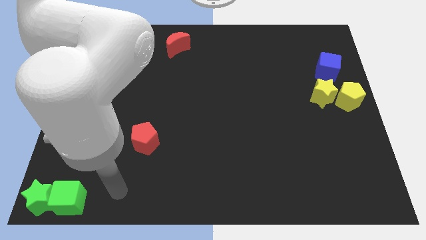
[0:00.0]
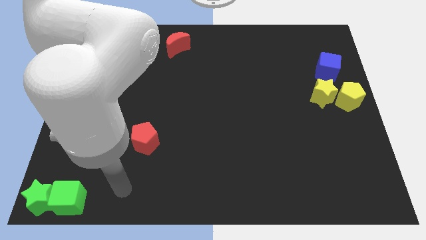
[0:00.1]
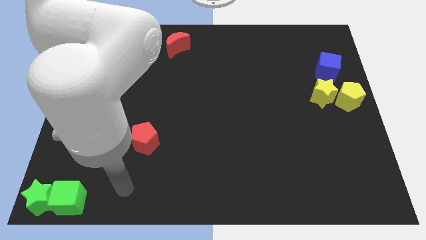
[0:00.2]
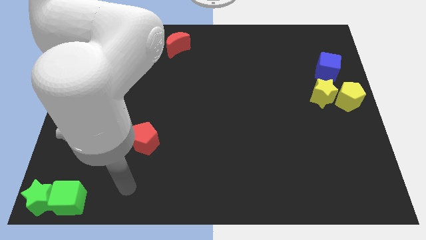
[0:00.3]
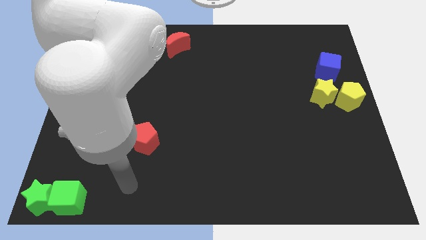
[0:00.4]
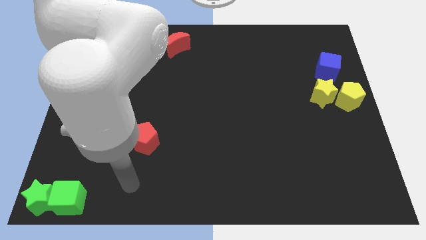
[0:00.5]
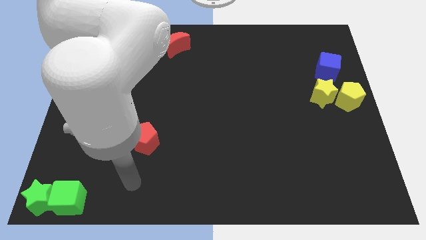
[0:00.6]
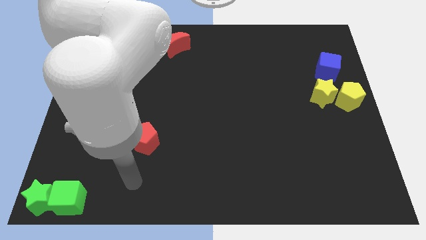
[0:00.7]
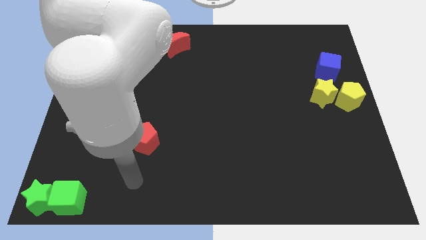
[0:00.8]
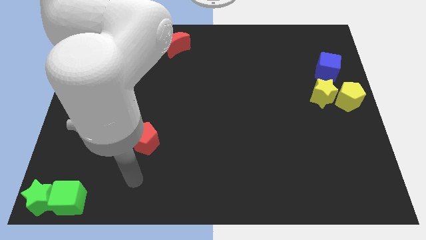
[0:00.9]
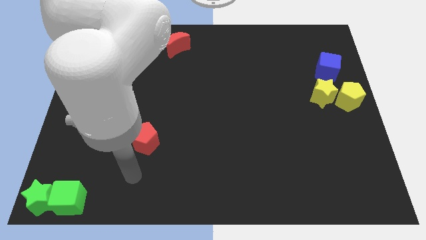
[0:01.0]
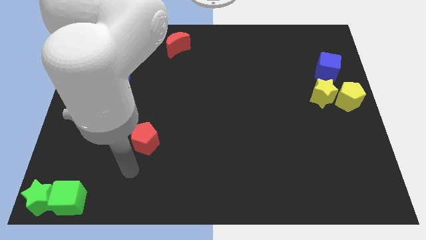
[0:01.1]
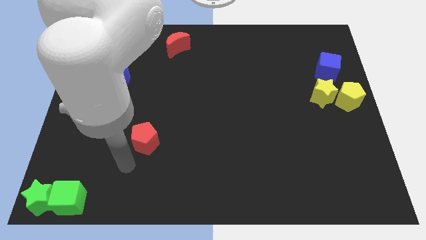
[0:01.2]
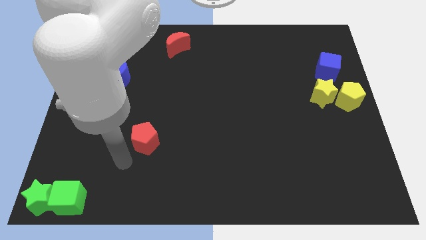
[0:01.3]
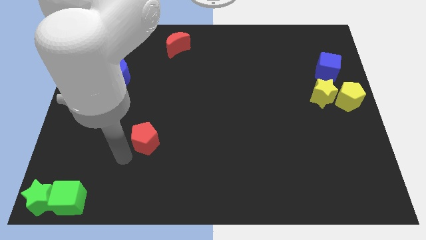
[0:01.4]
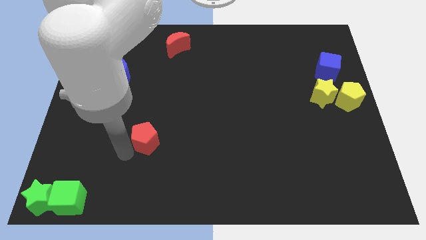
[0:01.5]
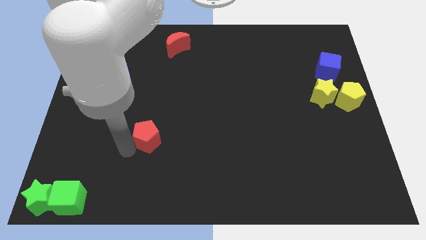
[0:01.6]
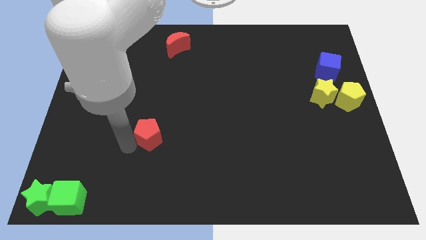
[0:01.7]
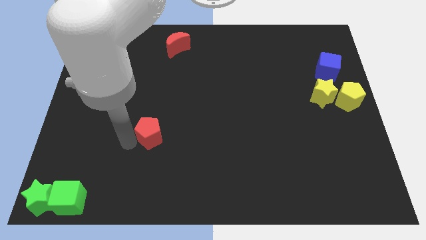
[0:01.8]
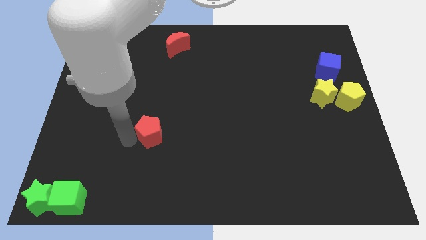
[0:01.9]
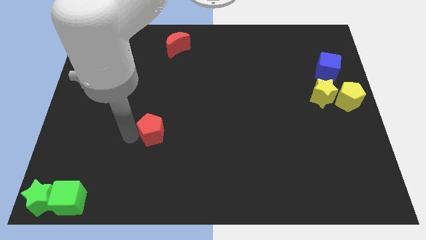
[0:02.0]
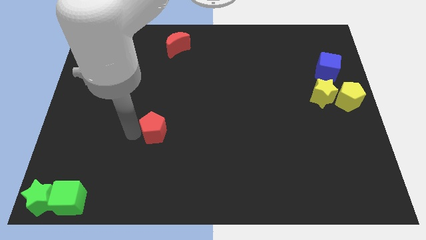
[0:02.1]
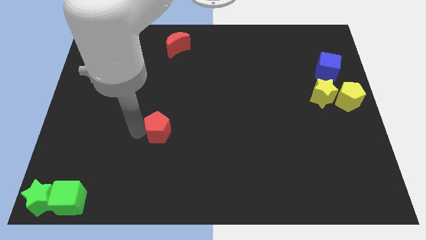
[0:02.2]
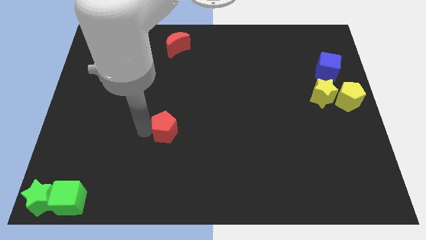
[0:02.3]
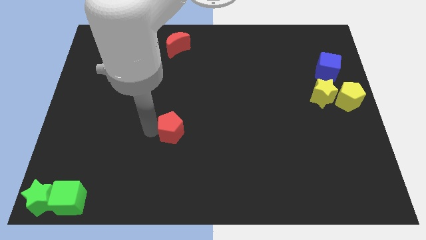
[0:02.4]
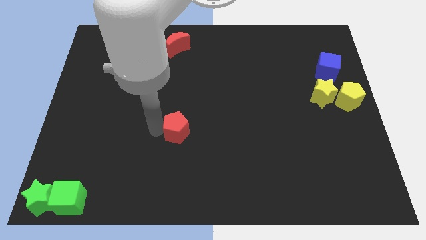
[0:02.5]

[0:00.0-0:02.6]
push the red pentagon below the red moon

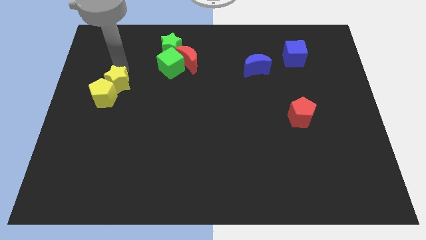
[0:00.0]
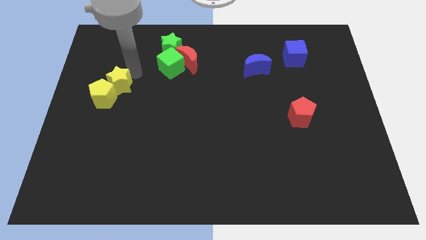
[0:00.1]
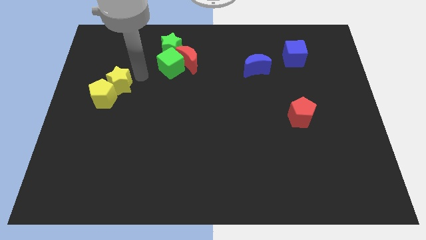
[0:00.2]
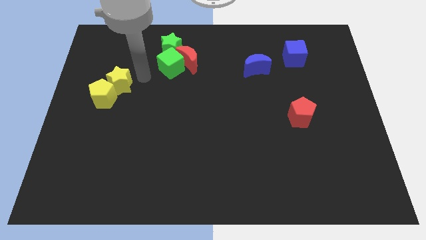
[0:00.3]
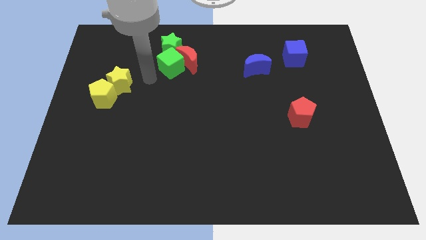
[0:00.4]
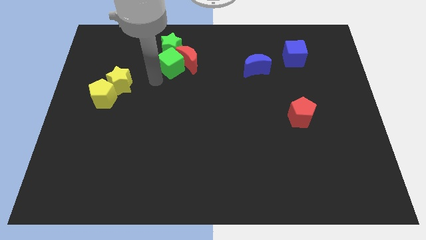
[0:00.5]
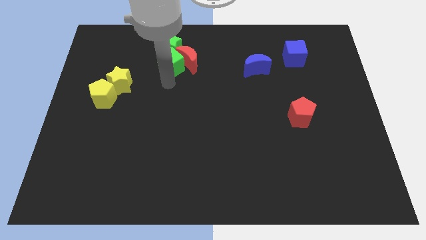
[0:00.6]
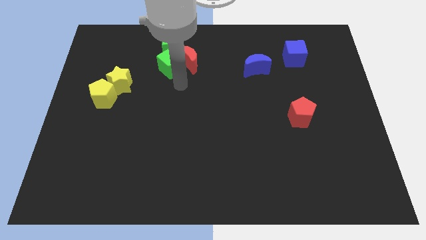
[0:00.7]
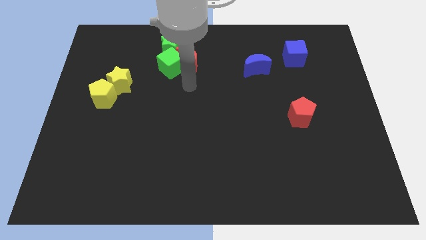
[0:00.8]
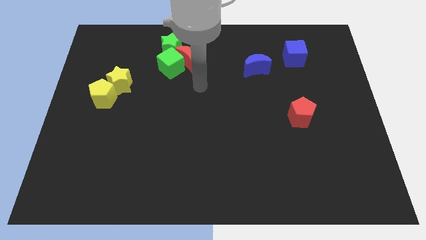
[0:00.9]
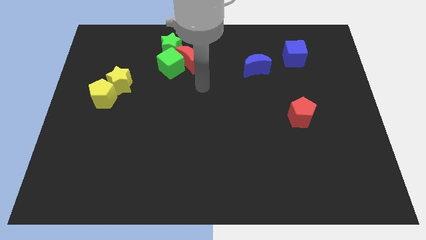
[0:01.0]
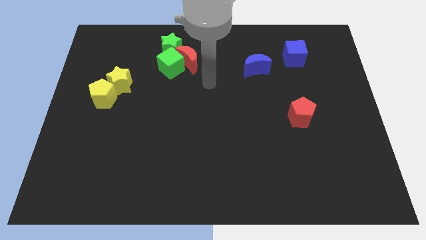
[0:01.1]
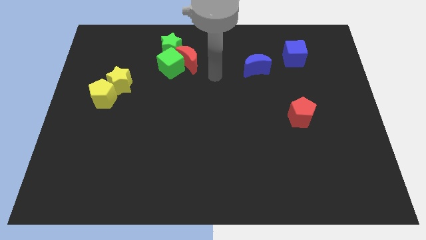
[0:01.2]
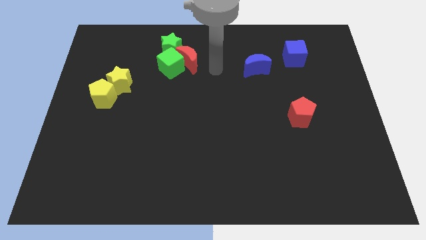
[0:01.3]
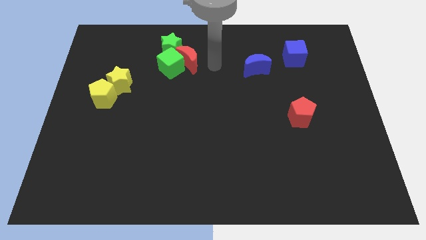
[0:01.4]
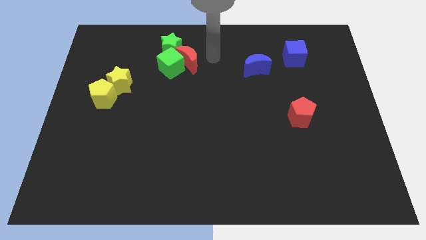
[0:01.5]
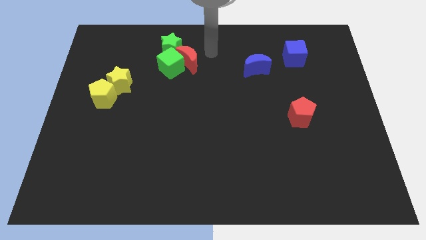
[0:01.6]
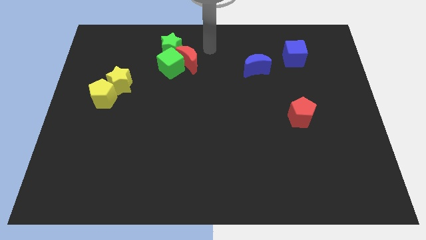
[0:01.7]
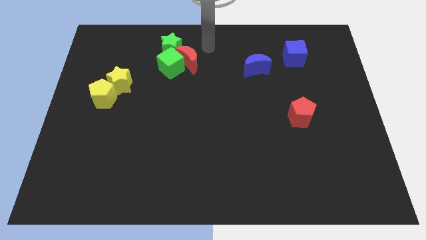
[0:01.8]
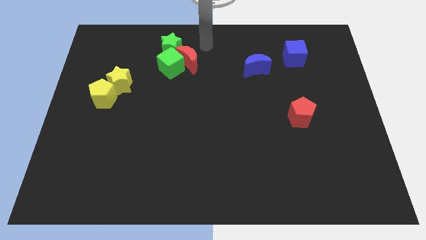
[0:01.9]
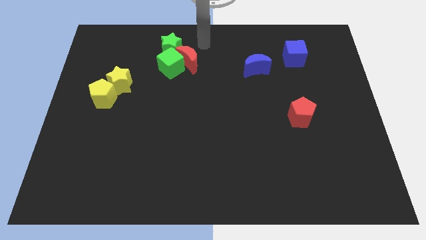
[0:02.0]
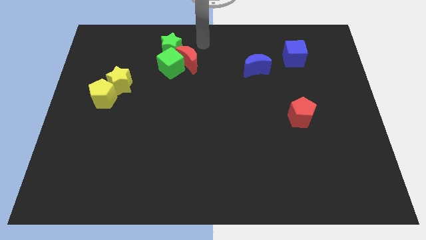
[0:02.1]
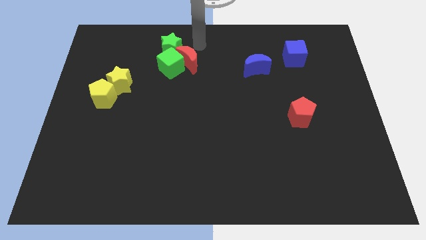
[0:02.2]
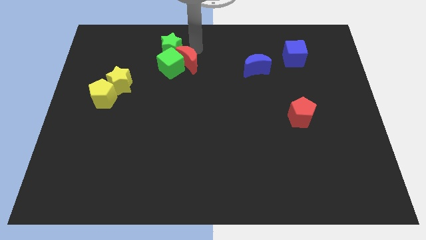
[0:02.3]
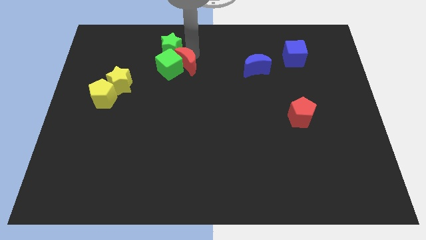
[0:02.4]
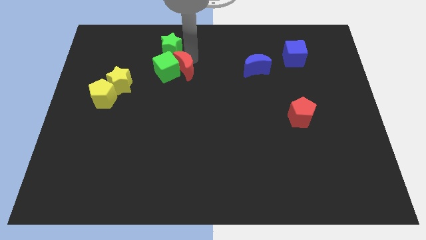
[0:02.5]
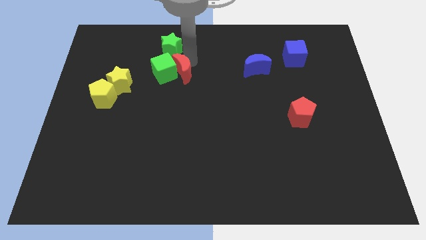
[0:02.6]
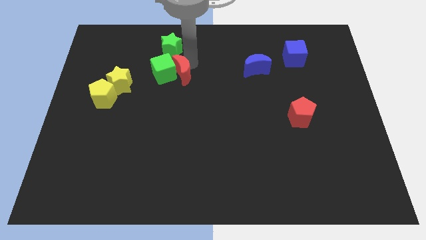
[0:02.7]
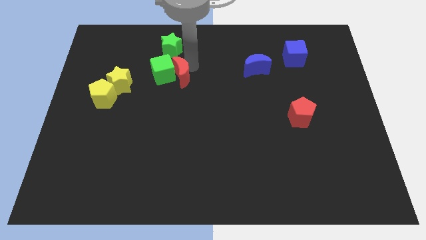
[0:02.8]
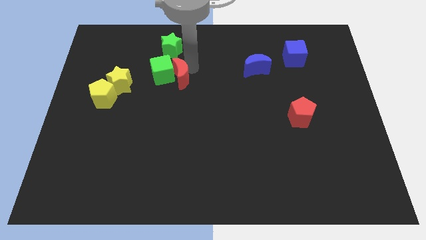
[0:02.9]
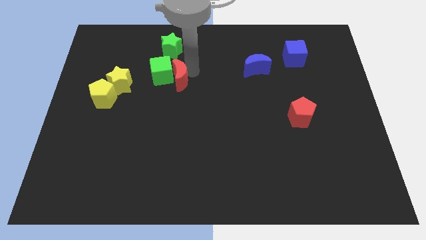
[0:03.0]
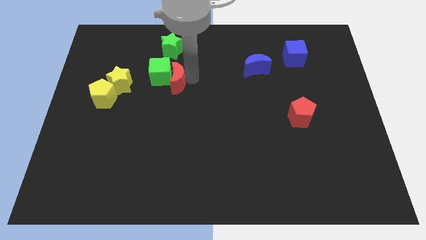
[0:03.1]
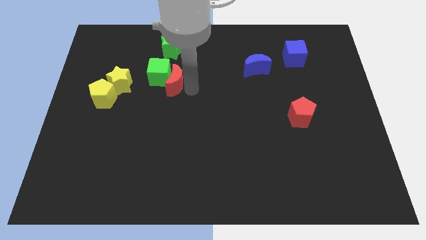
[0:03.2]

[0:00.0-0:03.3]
push the green cube into the red moon

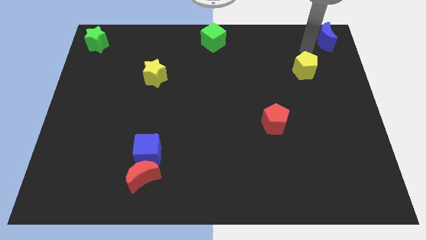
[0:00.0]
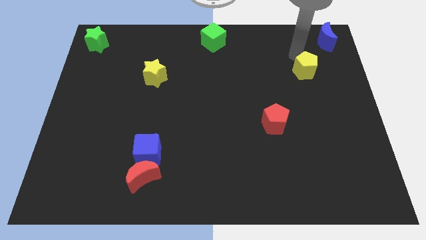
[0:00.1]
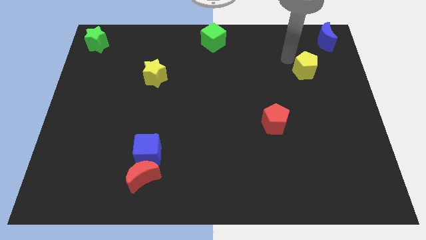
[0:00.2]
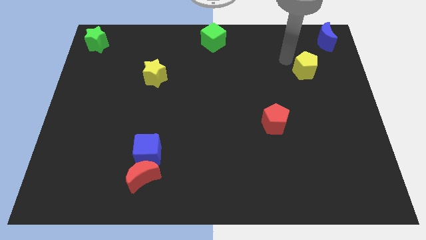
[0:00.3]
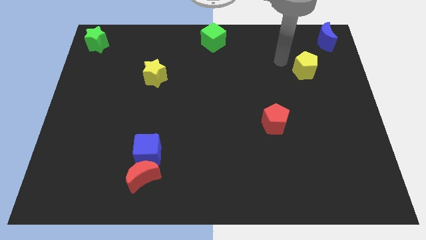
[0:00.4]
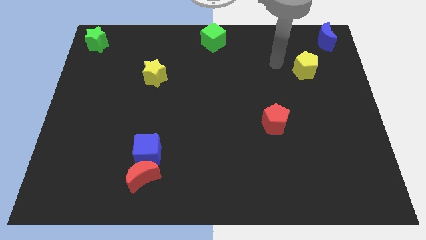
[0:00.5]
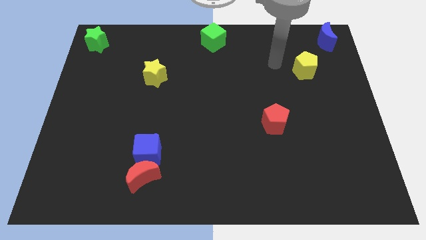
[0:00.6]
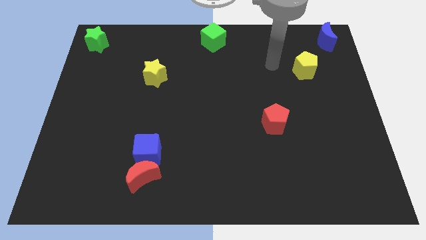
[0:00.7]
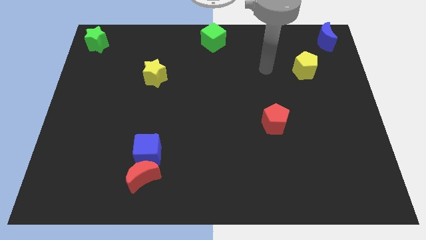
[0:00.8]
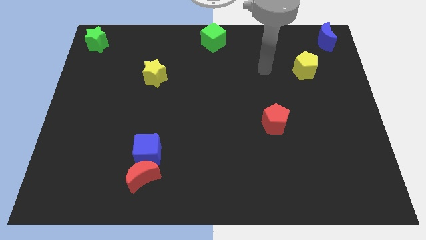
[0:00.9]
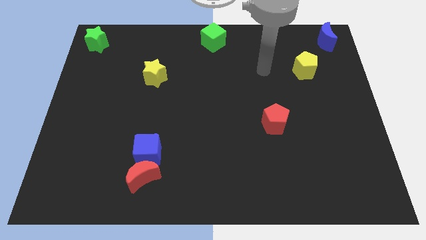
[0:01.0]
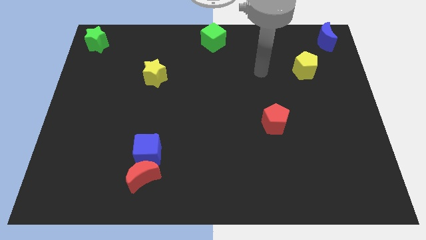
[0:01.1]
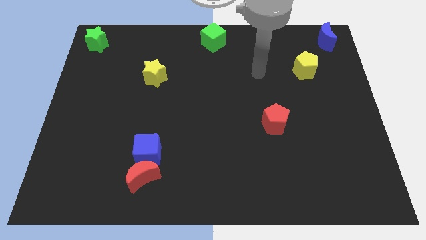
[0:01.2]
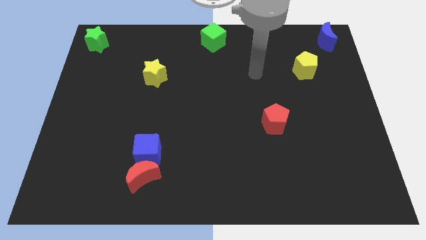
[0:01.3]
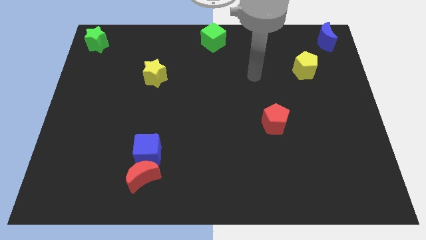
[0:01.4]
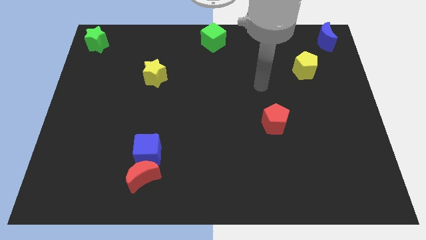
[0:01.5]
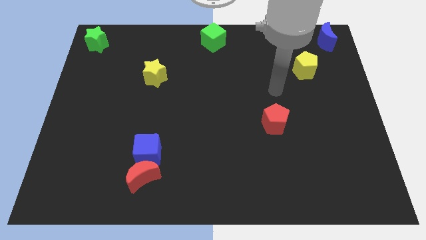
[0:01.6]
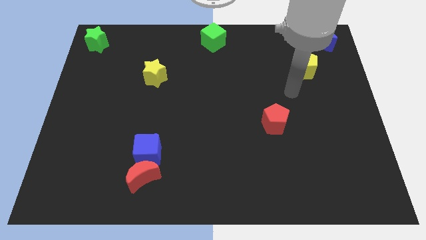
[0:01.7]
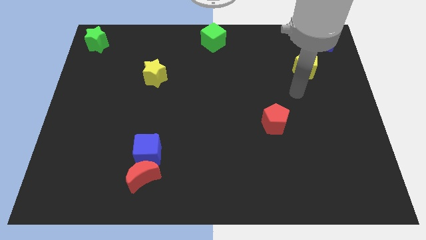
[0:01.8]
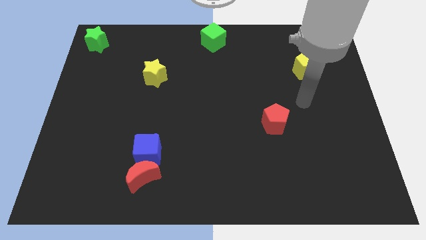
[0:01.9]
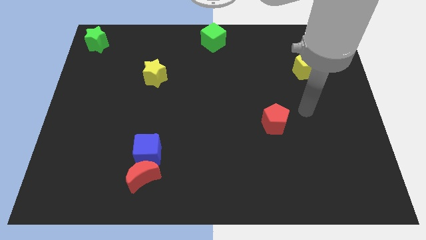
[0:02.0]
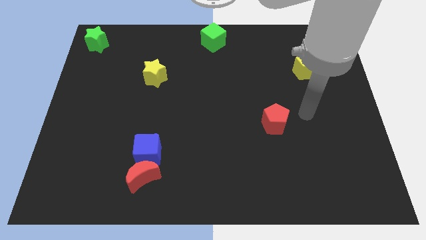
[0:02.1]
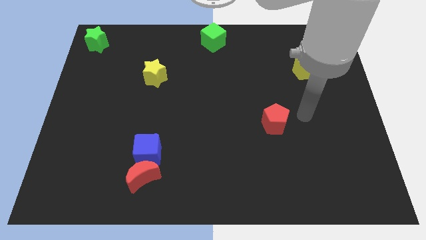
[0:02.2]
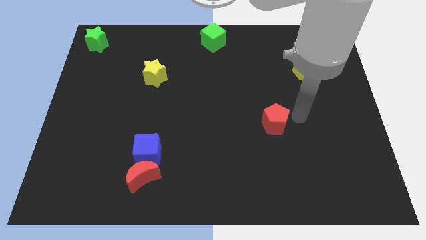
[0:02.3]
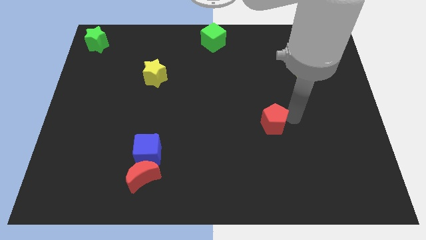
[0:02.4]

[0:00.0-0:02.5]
place arm on the right side of red pentagon

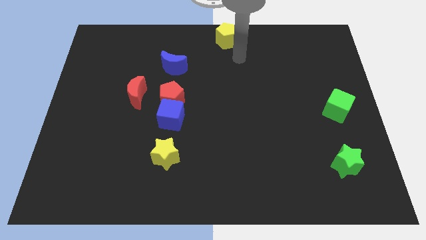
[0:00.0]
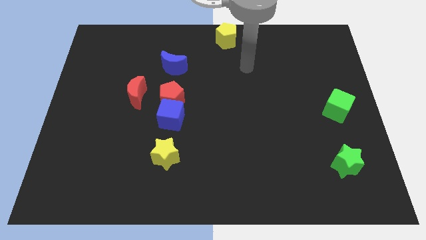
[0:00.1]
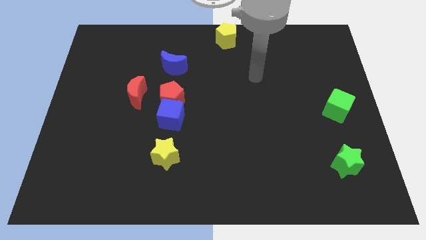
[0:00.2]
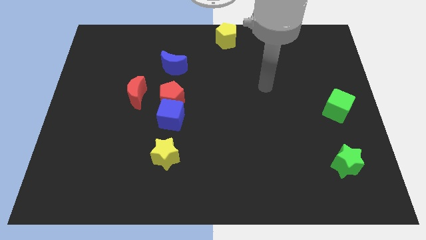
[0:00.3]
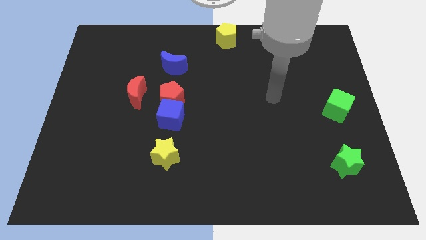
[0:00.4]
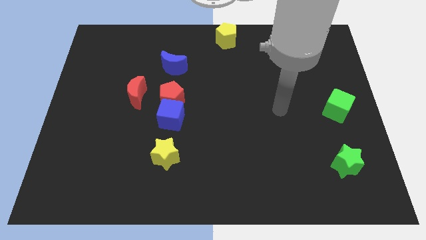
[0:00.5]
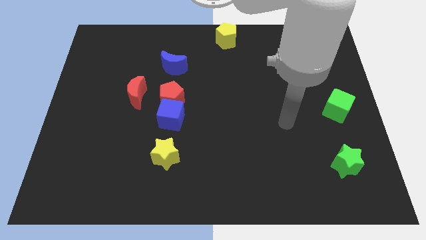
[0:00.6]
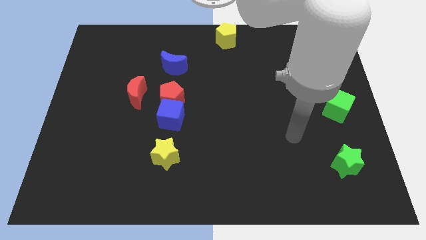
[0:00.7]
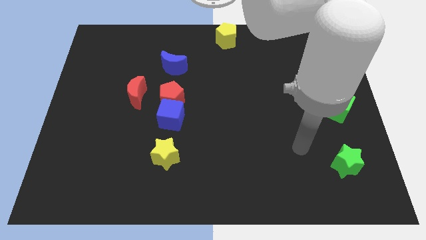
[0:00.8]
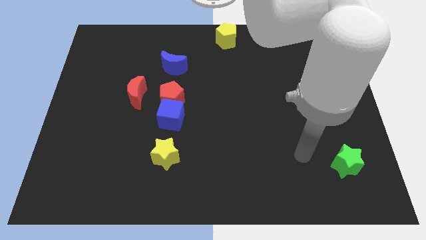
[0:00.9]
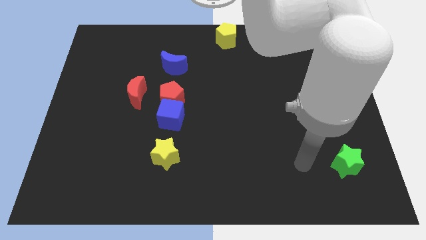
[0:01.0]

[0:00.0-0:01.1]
move your arm to the left of the green star
